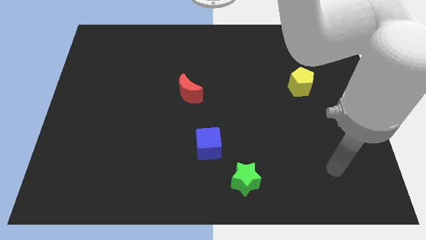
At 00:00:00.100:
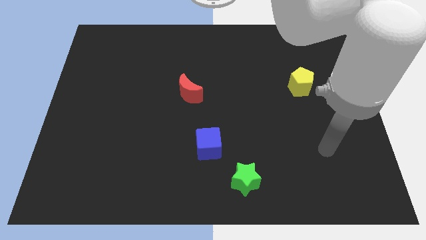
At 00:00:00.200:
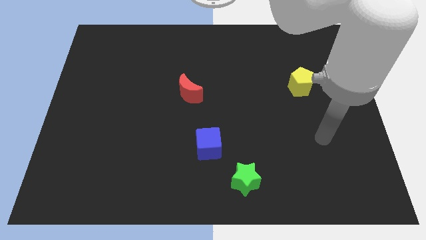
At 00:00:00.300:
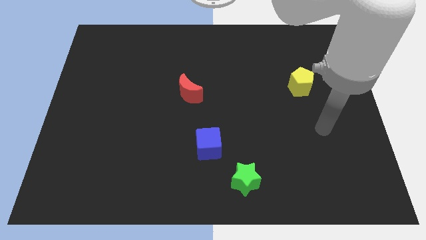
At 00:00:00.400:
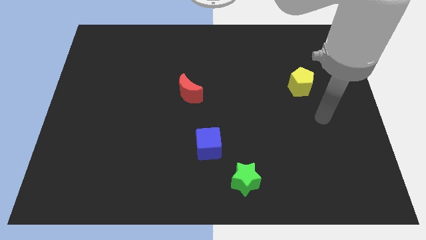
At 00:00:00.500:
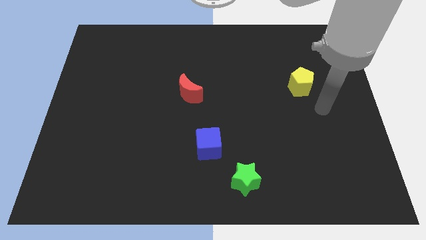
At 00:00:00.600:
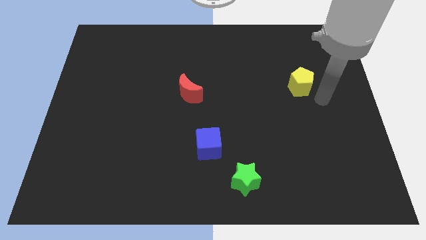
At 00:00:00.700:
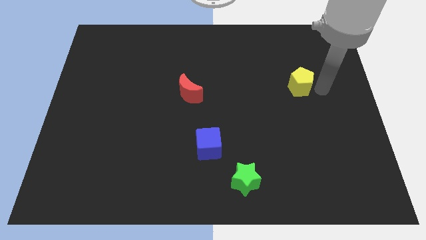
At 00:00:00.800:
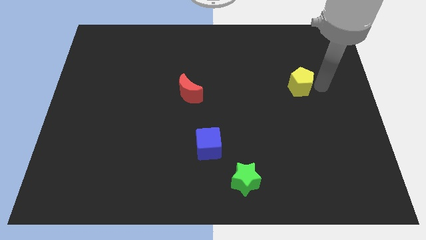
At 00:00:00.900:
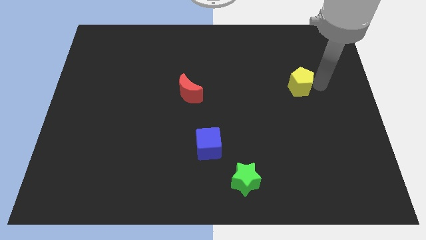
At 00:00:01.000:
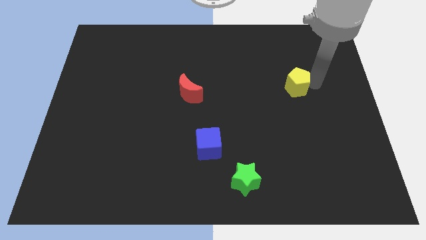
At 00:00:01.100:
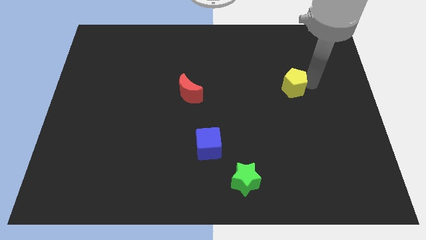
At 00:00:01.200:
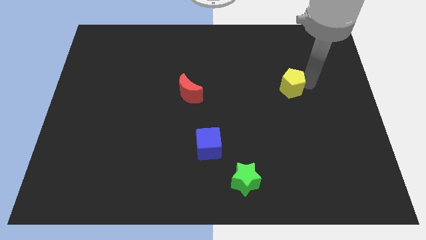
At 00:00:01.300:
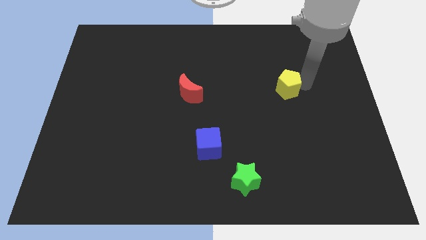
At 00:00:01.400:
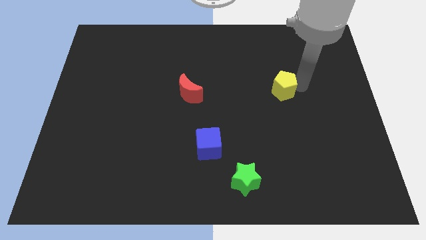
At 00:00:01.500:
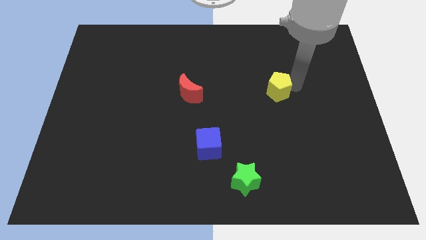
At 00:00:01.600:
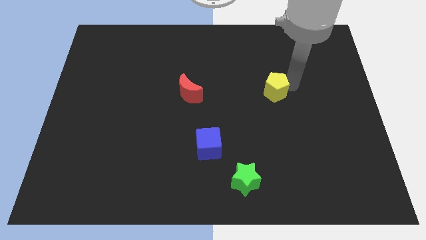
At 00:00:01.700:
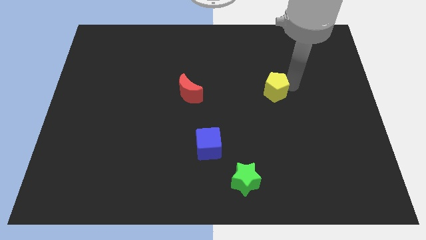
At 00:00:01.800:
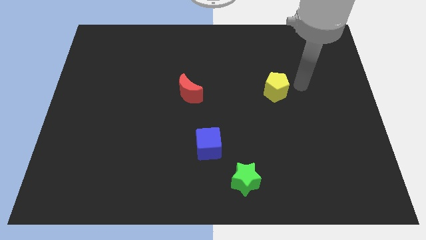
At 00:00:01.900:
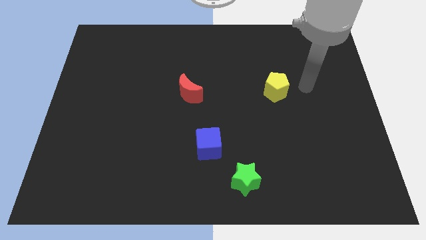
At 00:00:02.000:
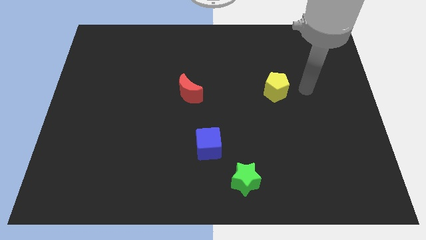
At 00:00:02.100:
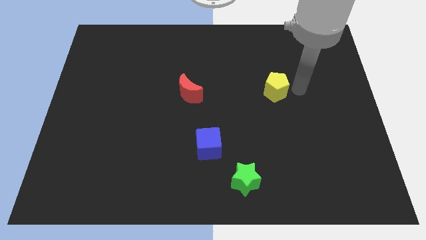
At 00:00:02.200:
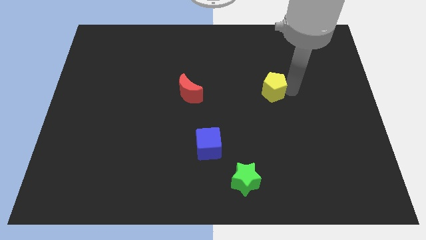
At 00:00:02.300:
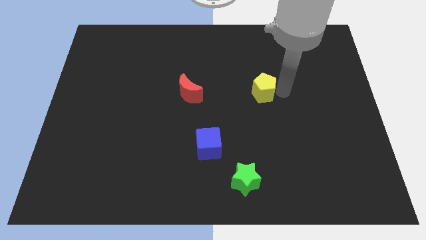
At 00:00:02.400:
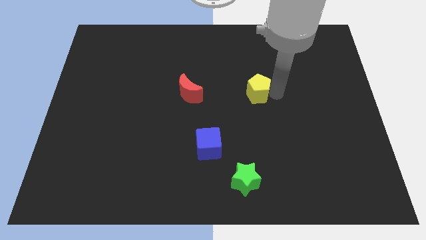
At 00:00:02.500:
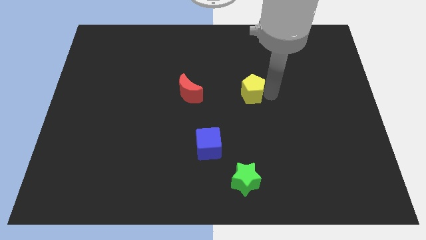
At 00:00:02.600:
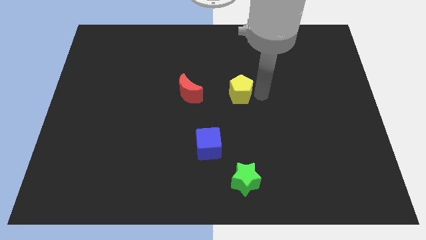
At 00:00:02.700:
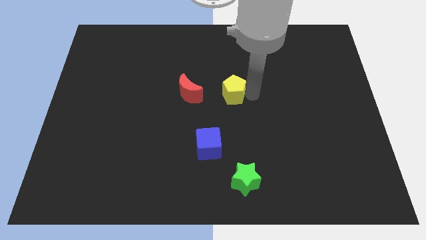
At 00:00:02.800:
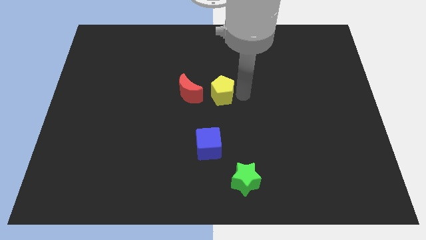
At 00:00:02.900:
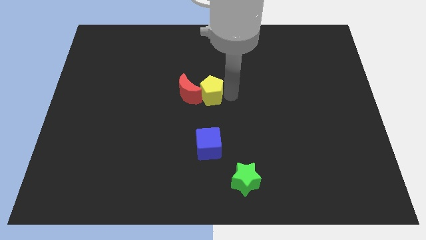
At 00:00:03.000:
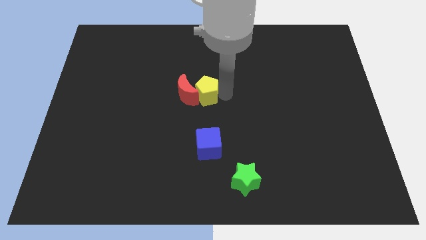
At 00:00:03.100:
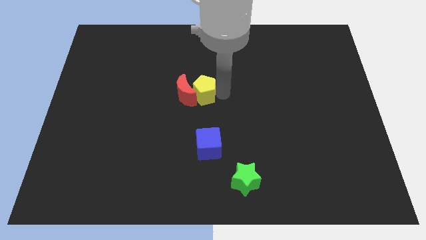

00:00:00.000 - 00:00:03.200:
push the pentagon next to the red block

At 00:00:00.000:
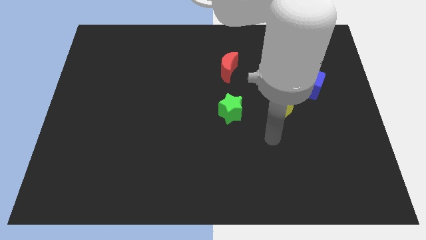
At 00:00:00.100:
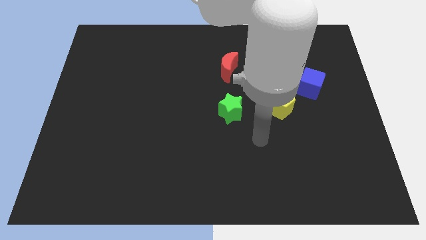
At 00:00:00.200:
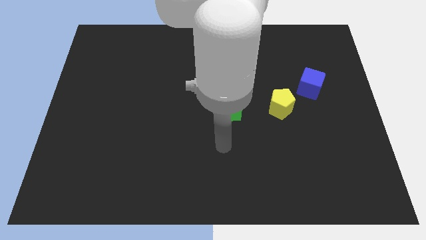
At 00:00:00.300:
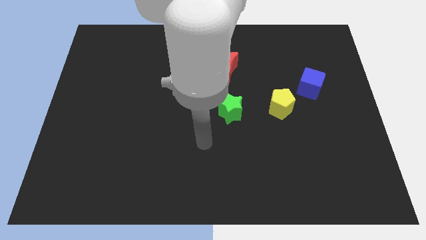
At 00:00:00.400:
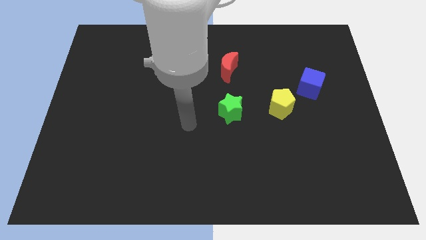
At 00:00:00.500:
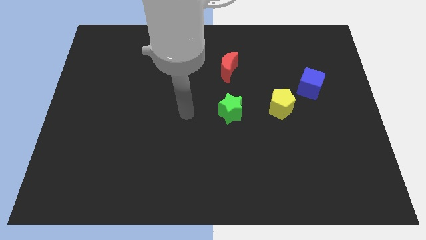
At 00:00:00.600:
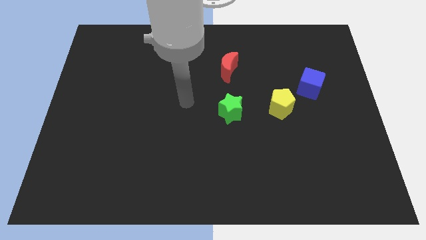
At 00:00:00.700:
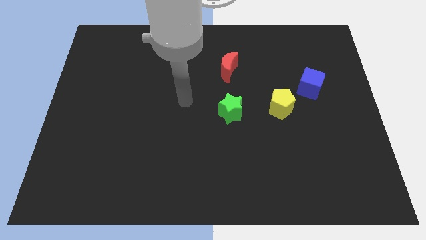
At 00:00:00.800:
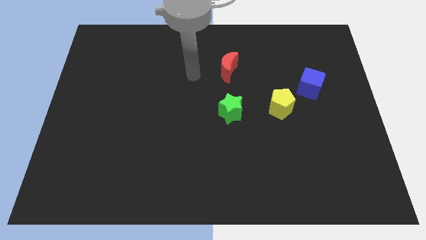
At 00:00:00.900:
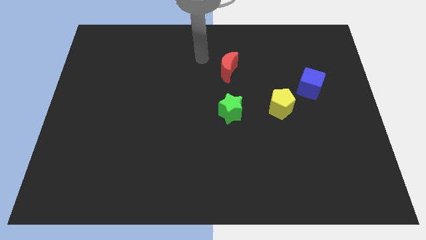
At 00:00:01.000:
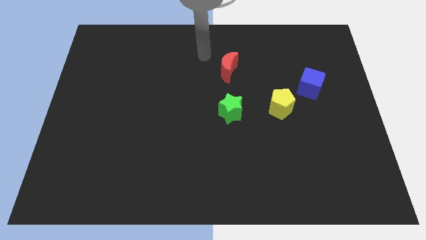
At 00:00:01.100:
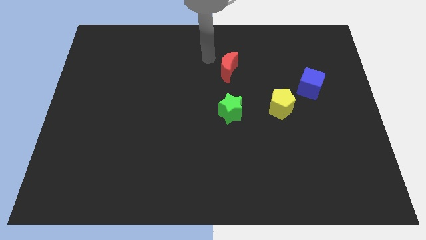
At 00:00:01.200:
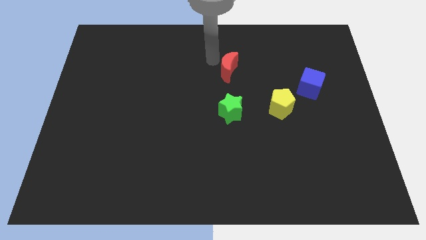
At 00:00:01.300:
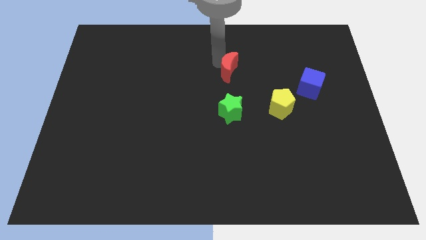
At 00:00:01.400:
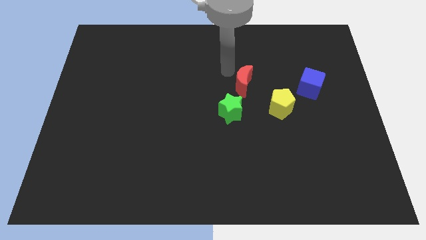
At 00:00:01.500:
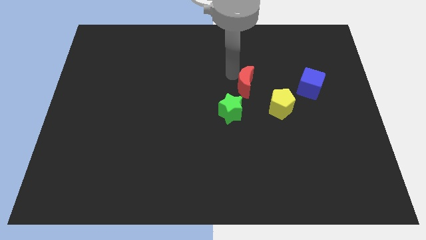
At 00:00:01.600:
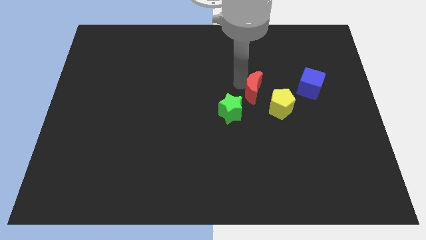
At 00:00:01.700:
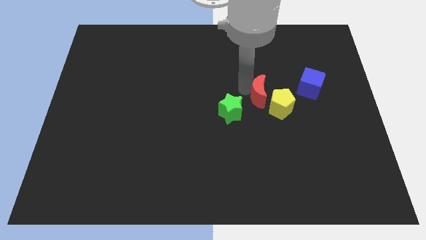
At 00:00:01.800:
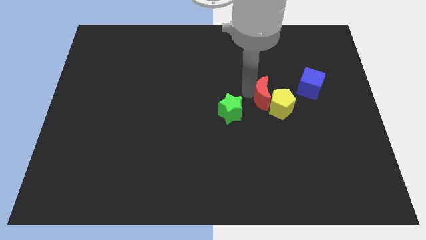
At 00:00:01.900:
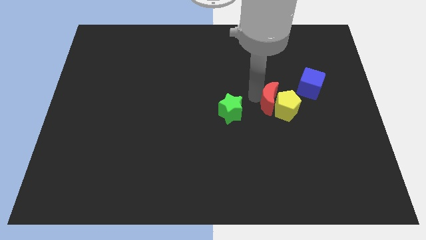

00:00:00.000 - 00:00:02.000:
put the red moon close to the yellow pentagon

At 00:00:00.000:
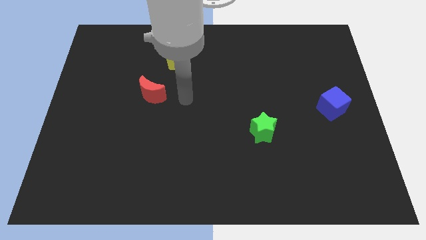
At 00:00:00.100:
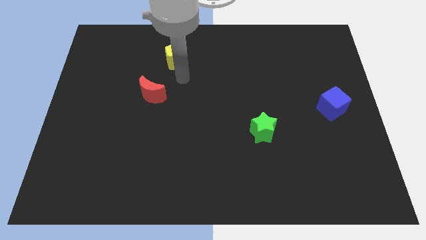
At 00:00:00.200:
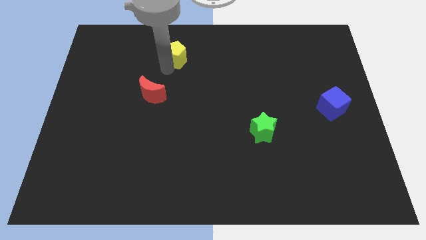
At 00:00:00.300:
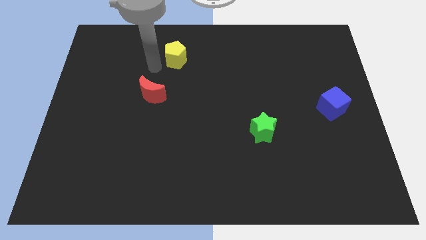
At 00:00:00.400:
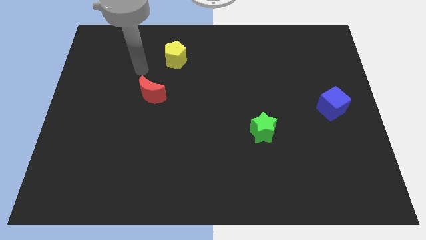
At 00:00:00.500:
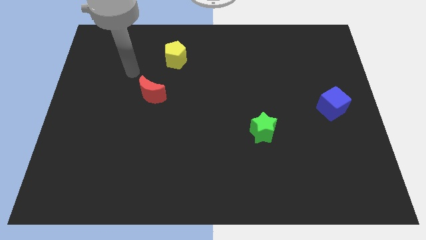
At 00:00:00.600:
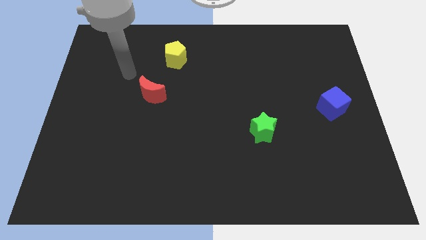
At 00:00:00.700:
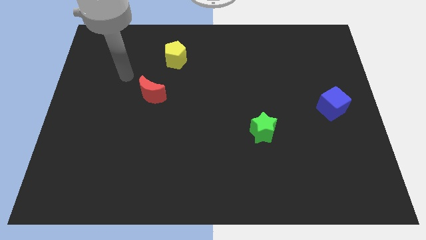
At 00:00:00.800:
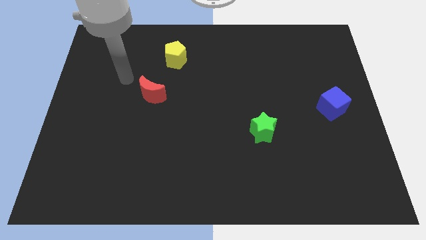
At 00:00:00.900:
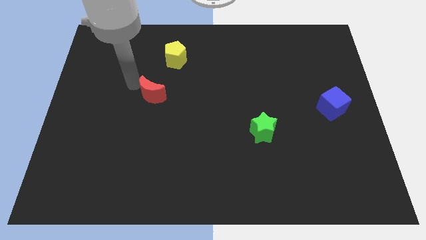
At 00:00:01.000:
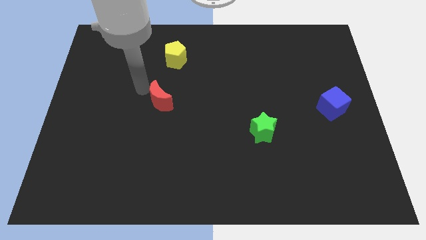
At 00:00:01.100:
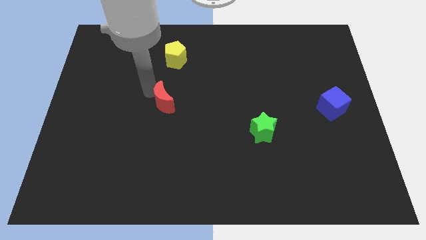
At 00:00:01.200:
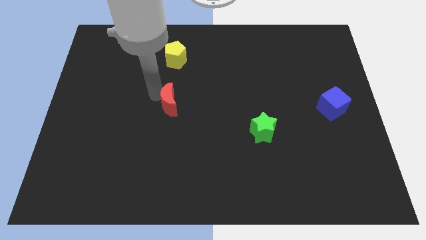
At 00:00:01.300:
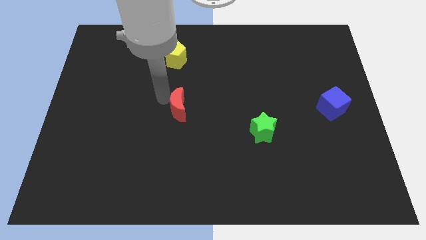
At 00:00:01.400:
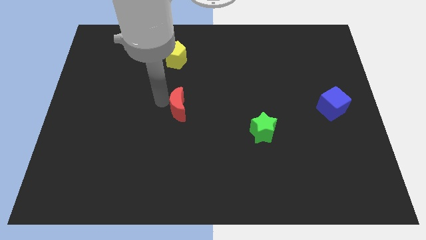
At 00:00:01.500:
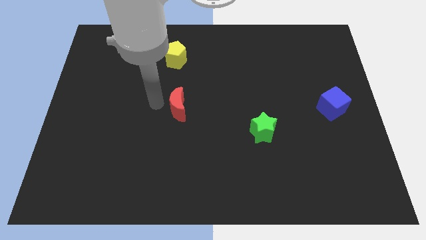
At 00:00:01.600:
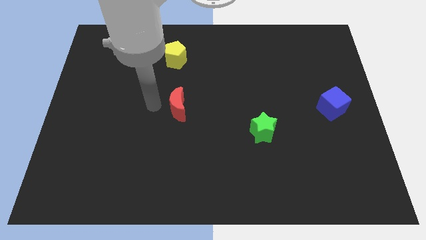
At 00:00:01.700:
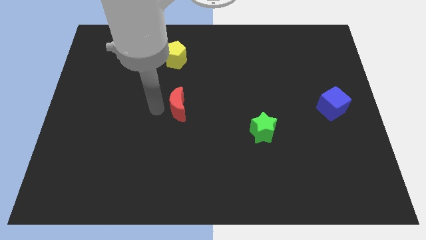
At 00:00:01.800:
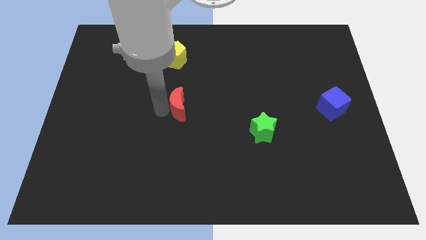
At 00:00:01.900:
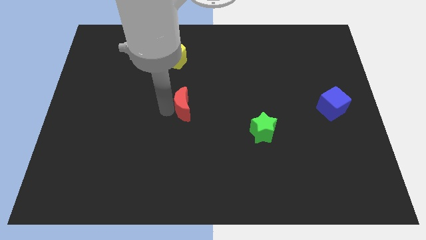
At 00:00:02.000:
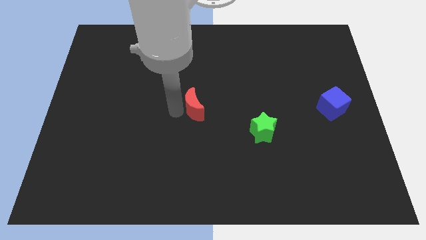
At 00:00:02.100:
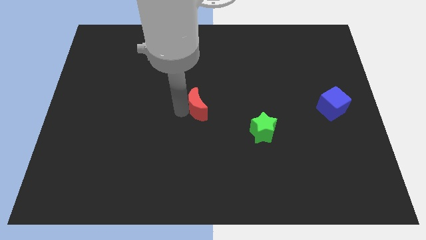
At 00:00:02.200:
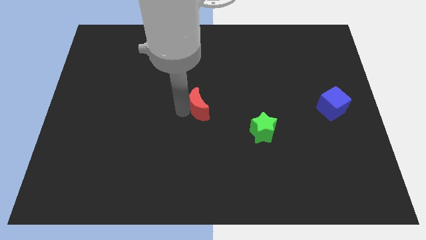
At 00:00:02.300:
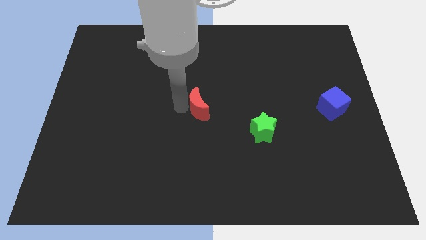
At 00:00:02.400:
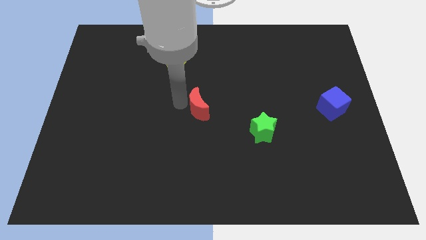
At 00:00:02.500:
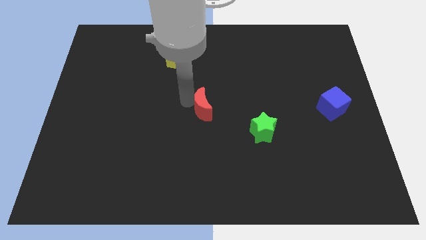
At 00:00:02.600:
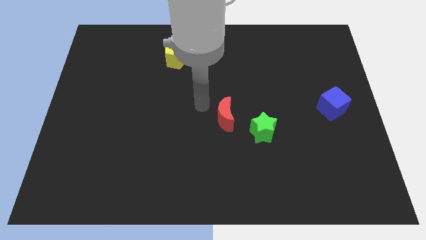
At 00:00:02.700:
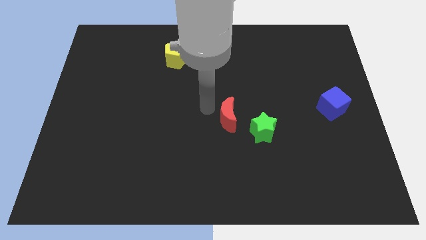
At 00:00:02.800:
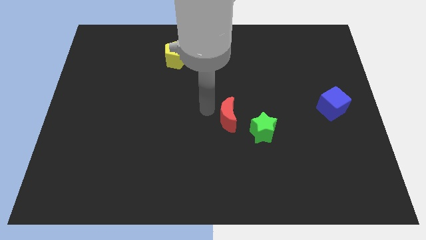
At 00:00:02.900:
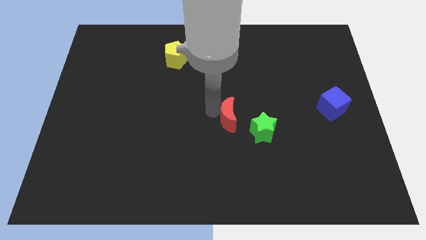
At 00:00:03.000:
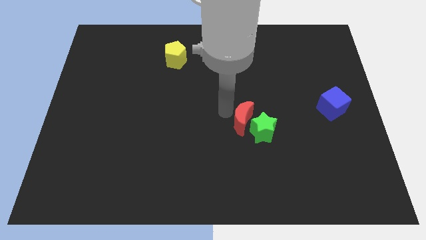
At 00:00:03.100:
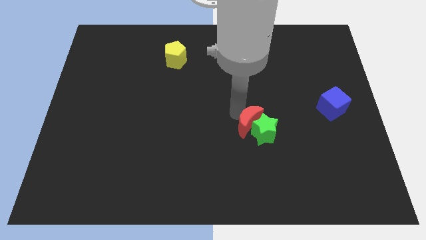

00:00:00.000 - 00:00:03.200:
move the red block towards the star

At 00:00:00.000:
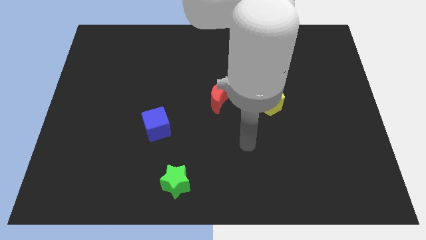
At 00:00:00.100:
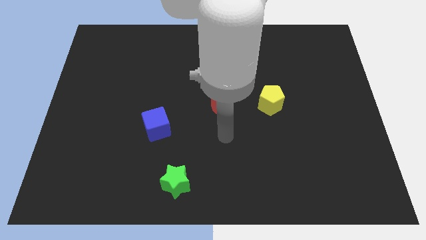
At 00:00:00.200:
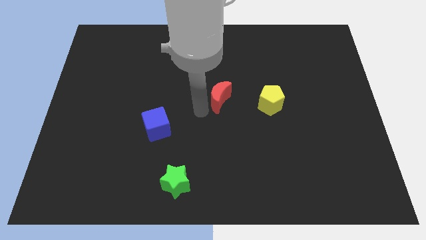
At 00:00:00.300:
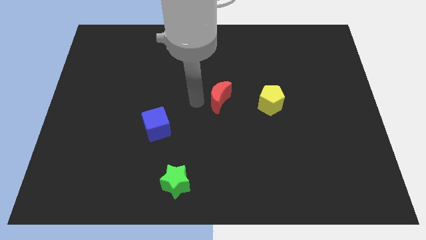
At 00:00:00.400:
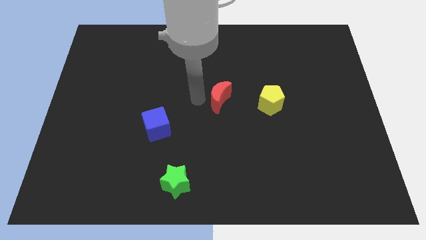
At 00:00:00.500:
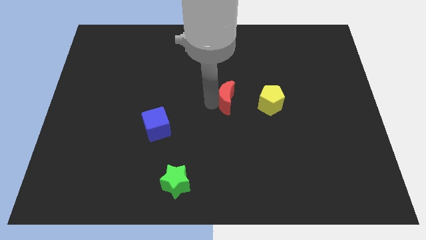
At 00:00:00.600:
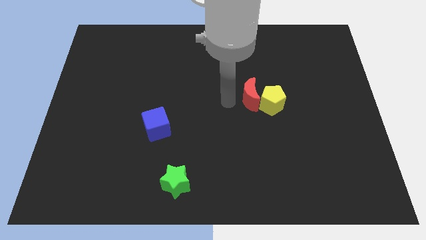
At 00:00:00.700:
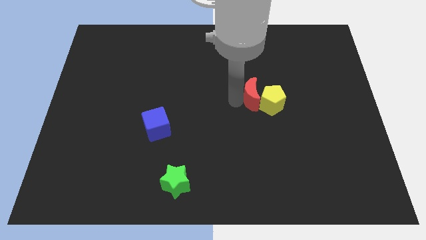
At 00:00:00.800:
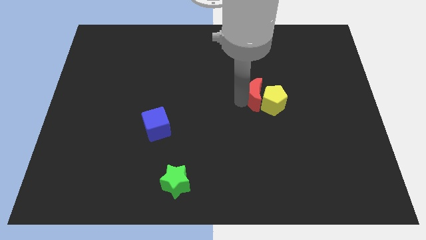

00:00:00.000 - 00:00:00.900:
push the red block next to the yellow block
